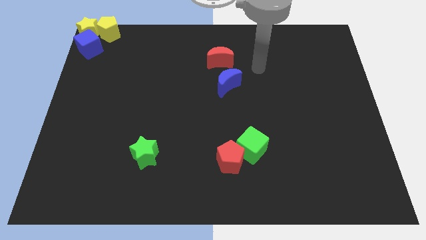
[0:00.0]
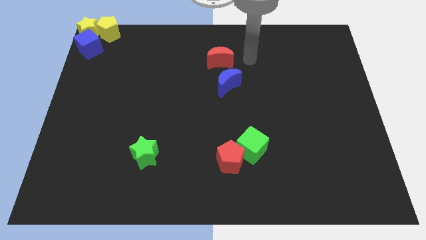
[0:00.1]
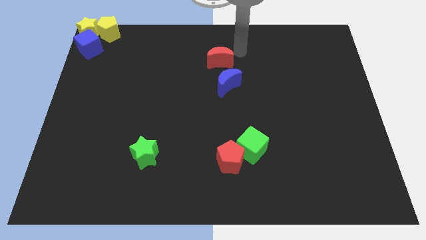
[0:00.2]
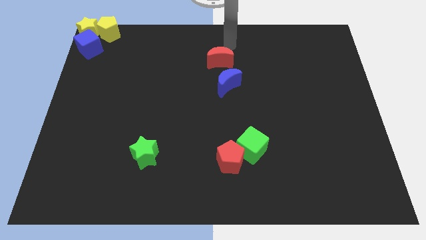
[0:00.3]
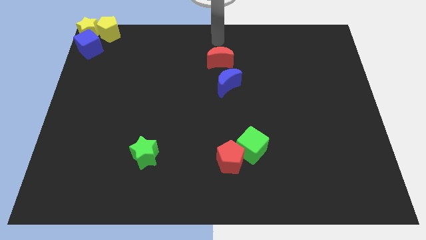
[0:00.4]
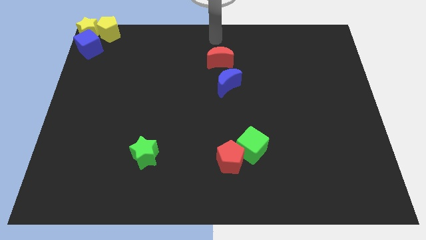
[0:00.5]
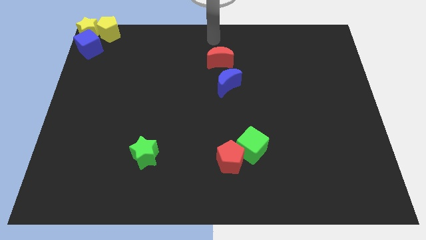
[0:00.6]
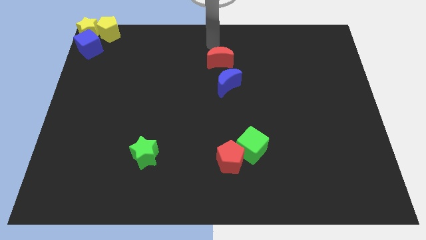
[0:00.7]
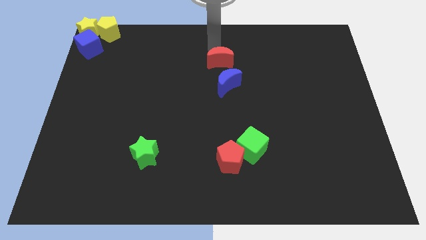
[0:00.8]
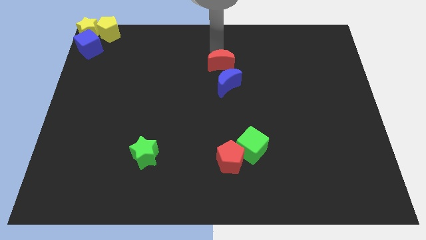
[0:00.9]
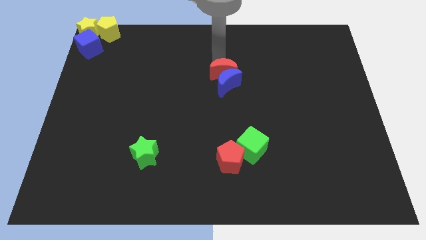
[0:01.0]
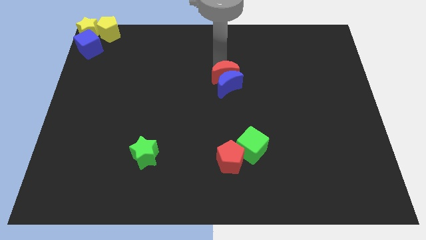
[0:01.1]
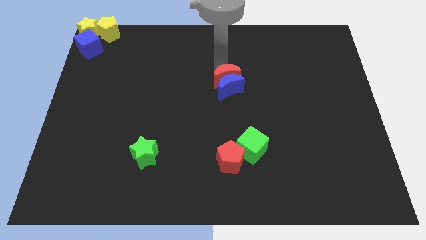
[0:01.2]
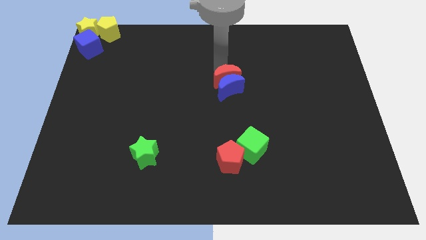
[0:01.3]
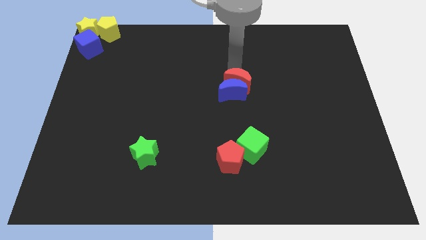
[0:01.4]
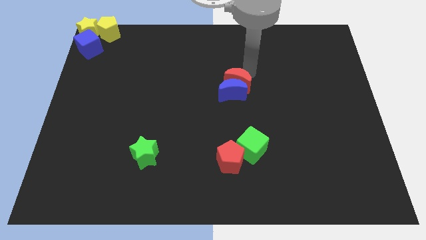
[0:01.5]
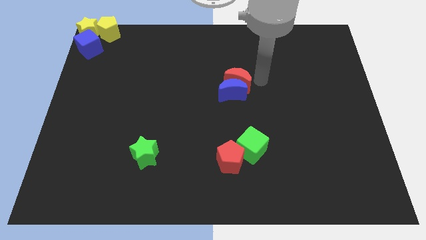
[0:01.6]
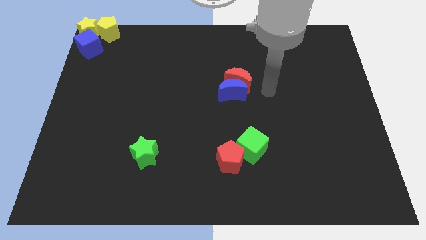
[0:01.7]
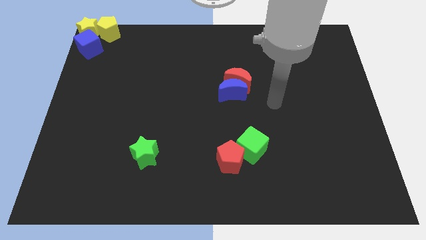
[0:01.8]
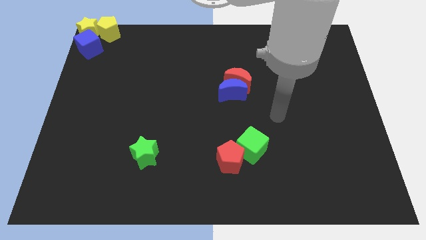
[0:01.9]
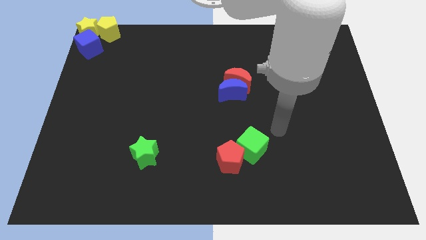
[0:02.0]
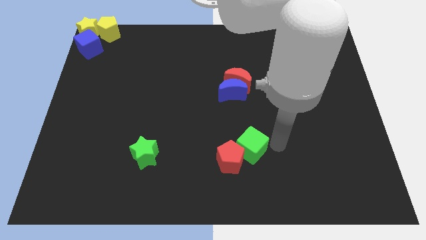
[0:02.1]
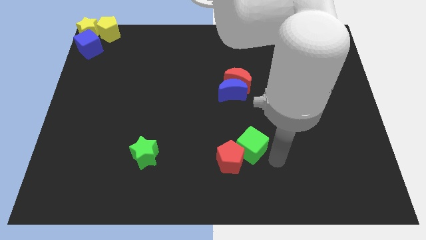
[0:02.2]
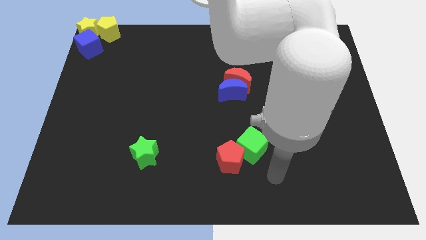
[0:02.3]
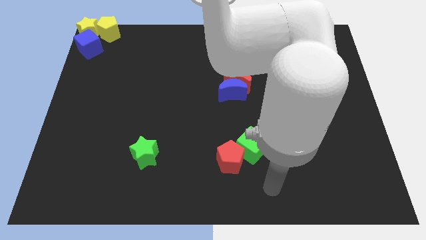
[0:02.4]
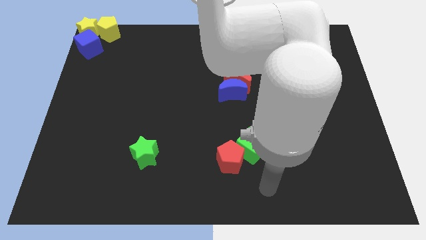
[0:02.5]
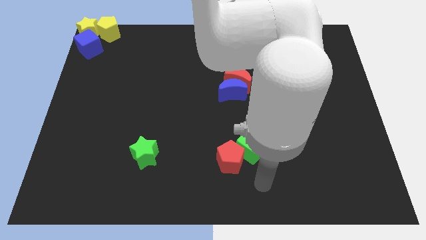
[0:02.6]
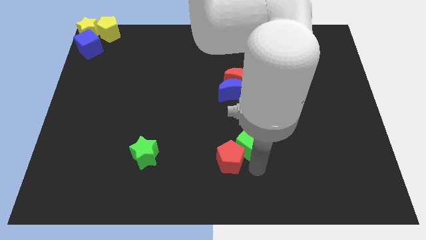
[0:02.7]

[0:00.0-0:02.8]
place the arm down to the green cube

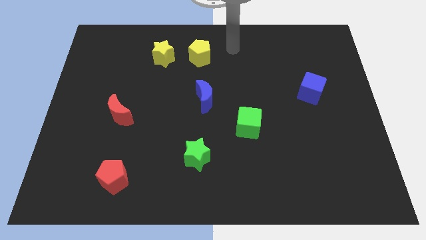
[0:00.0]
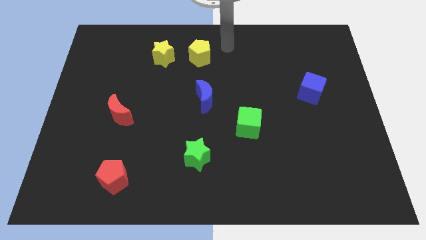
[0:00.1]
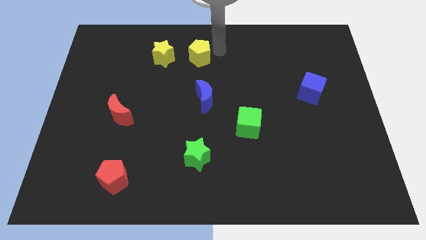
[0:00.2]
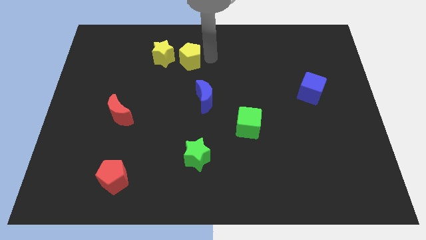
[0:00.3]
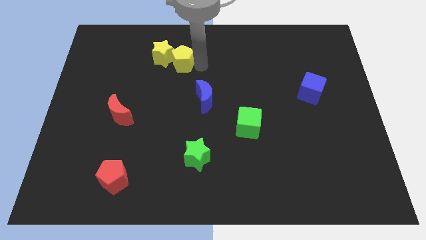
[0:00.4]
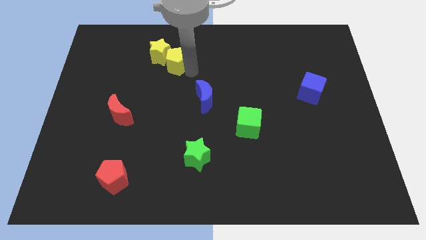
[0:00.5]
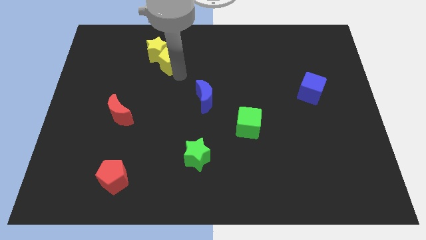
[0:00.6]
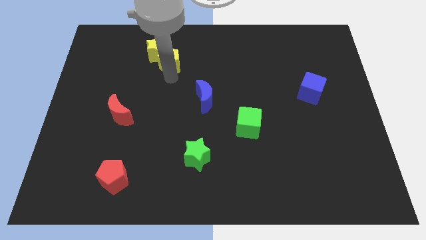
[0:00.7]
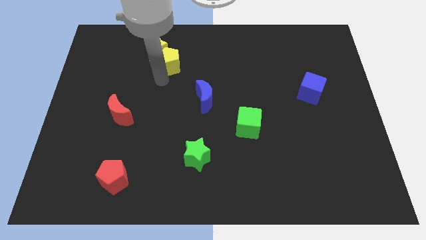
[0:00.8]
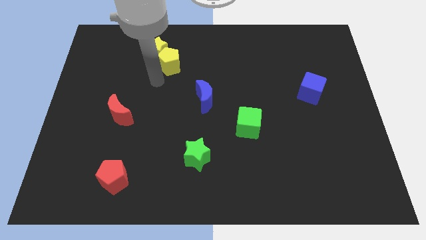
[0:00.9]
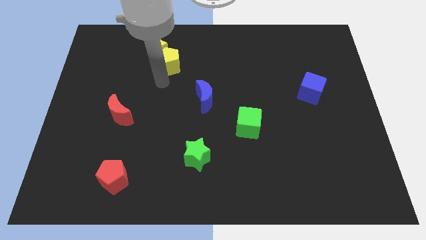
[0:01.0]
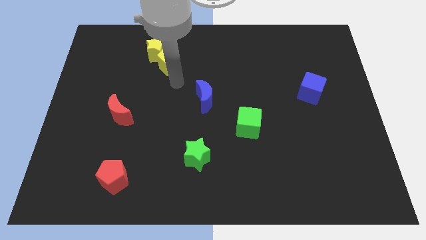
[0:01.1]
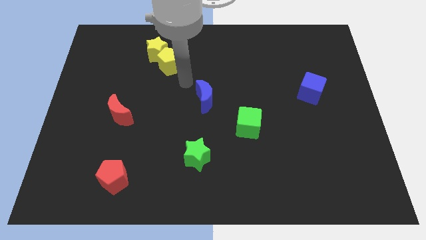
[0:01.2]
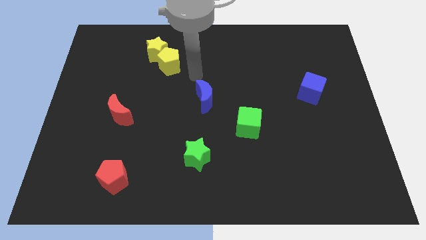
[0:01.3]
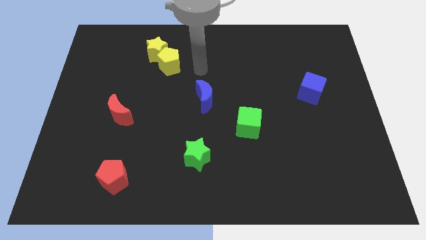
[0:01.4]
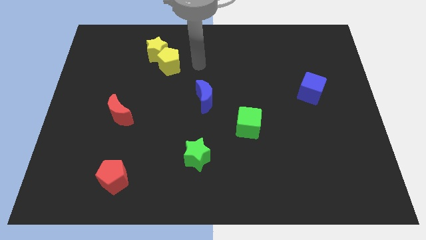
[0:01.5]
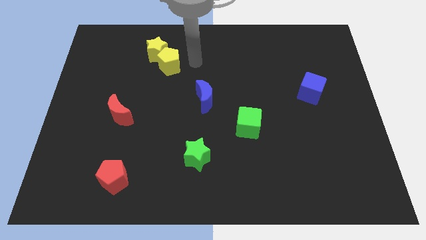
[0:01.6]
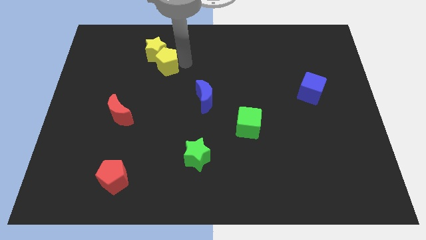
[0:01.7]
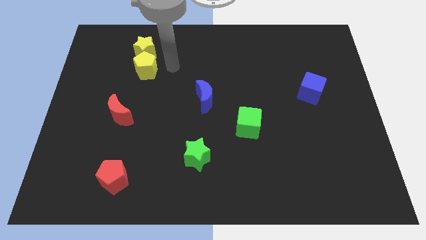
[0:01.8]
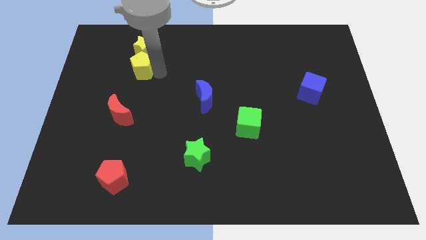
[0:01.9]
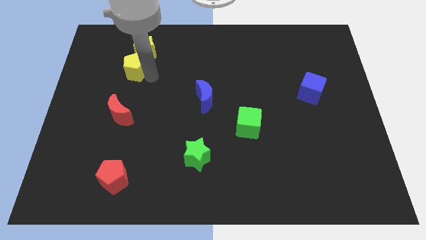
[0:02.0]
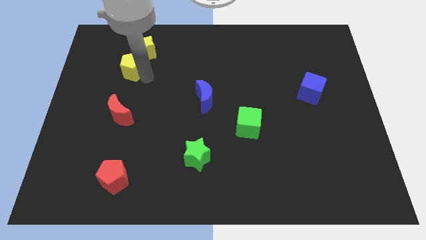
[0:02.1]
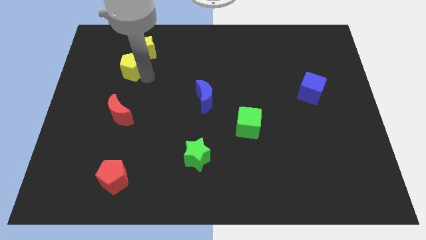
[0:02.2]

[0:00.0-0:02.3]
place the yellow pentagon below the yellow star

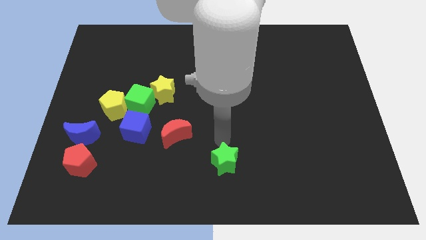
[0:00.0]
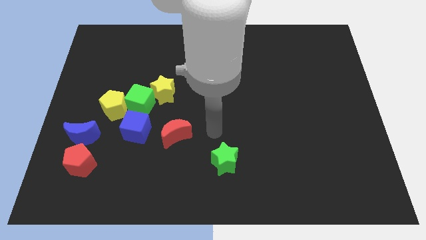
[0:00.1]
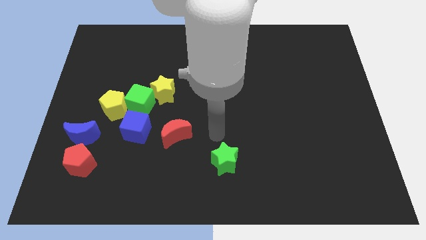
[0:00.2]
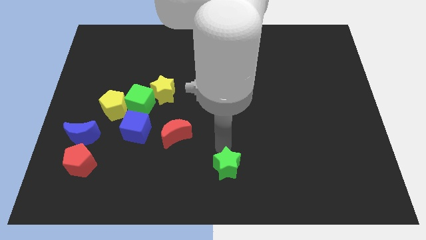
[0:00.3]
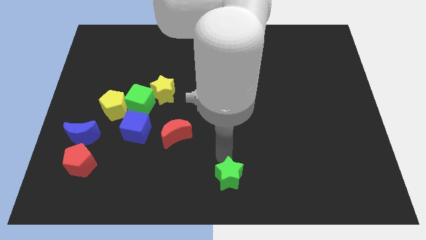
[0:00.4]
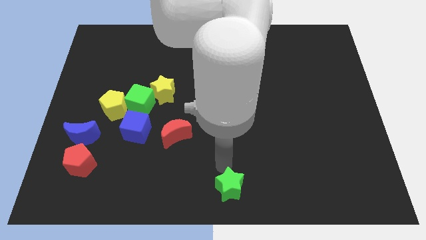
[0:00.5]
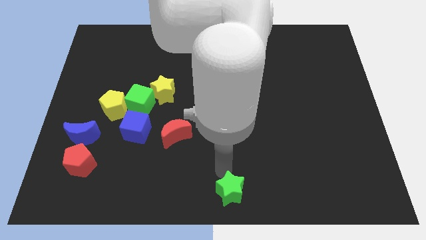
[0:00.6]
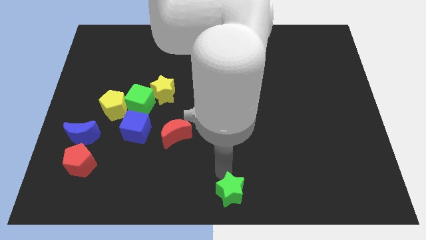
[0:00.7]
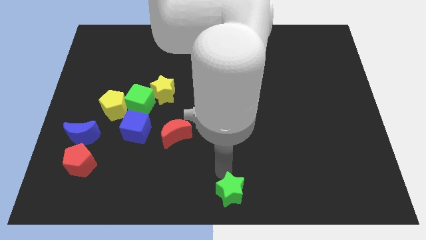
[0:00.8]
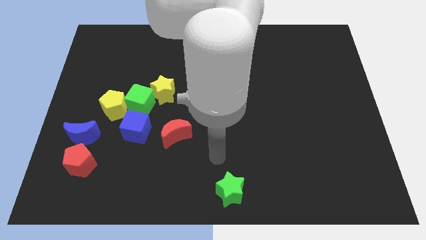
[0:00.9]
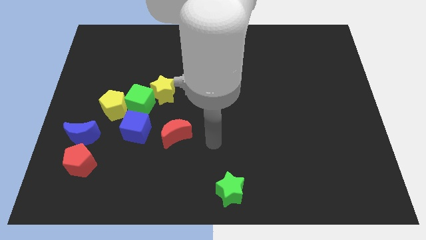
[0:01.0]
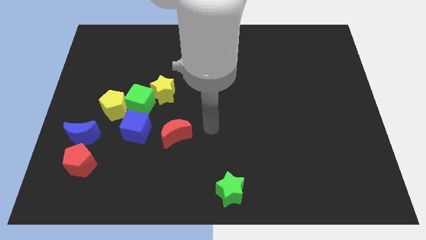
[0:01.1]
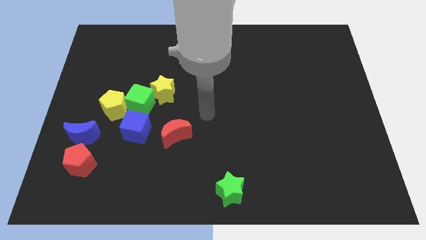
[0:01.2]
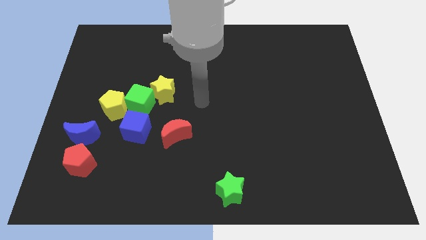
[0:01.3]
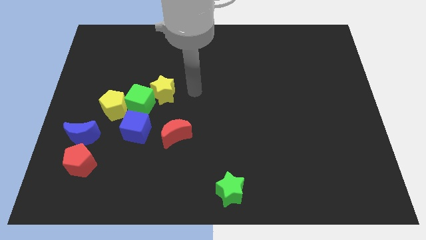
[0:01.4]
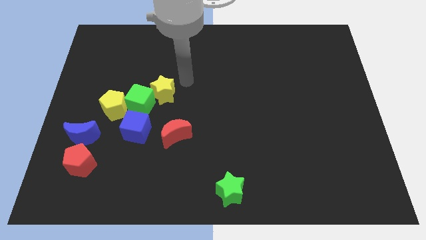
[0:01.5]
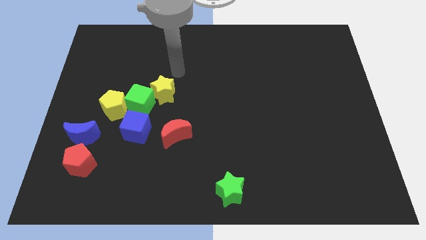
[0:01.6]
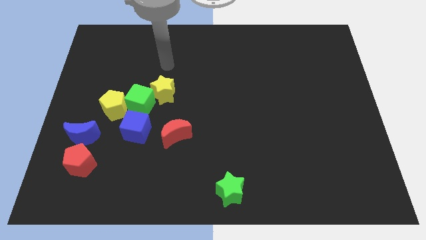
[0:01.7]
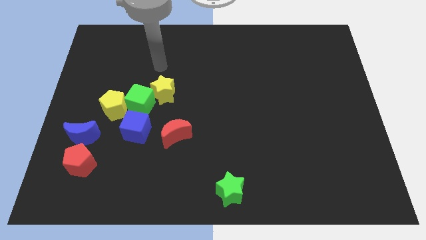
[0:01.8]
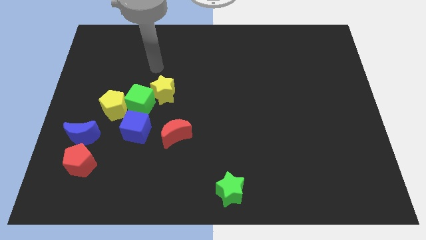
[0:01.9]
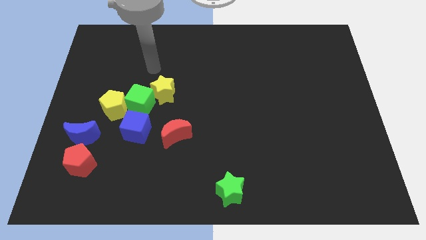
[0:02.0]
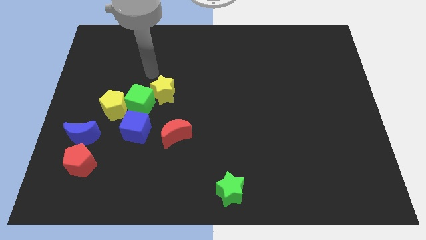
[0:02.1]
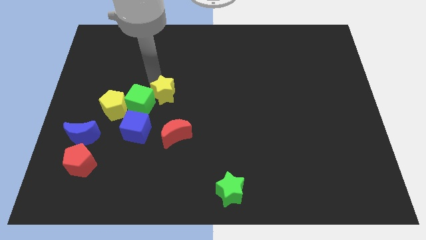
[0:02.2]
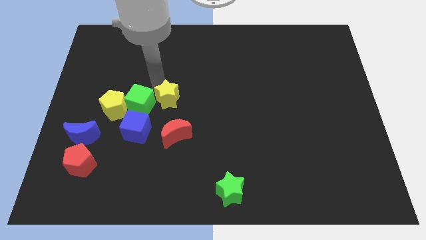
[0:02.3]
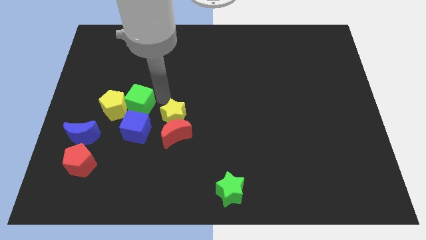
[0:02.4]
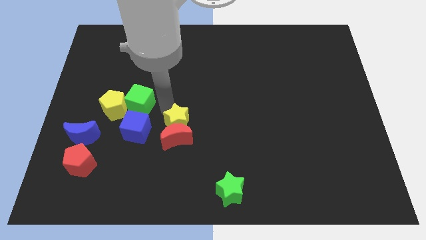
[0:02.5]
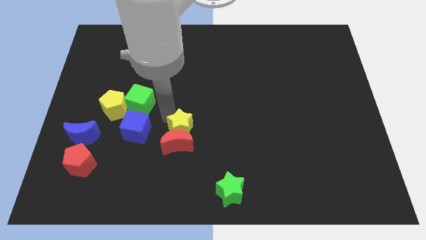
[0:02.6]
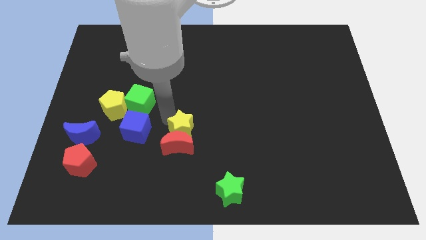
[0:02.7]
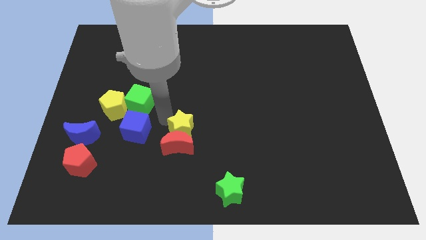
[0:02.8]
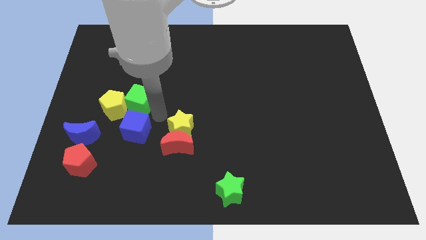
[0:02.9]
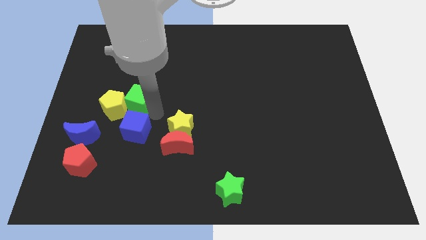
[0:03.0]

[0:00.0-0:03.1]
slide yellow star into the red crescent

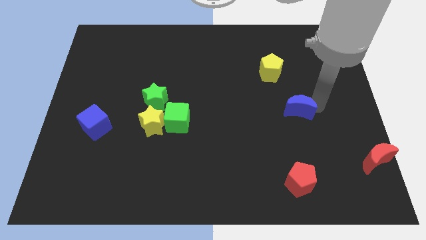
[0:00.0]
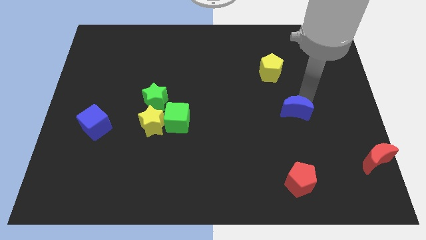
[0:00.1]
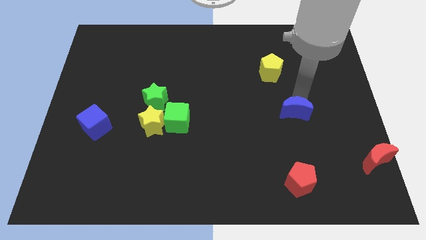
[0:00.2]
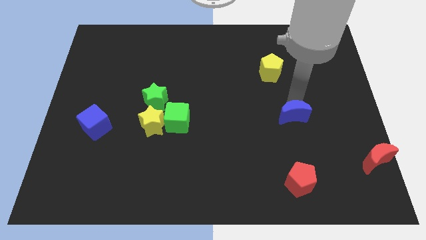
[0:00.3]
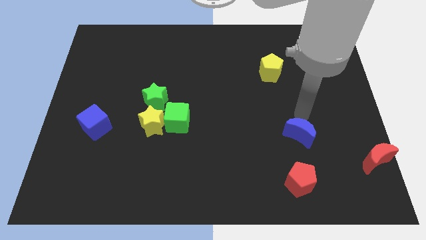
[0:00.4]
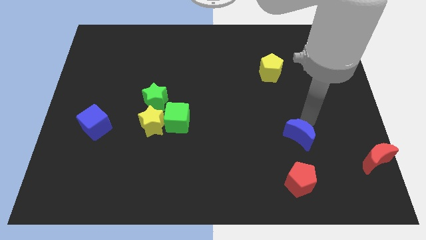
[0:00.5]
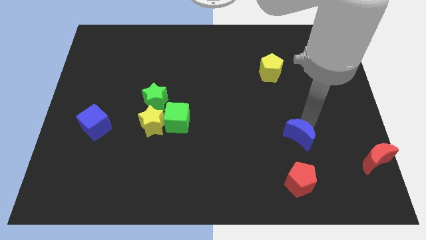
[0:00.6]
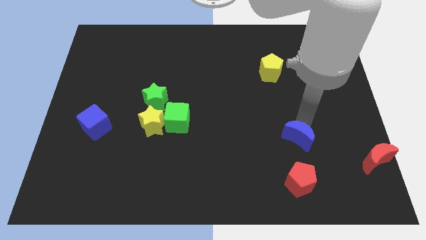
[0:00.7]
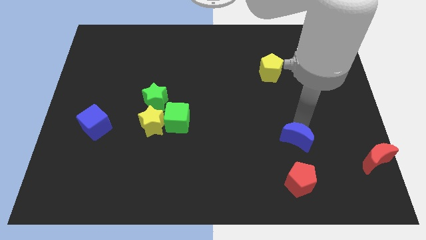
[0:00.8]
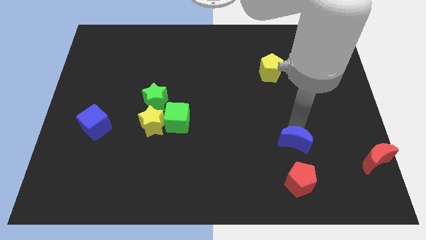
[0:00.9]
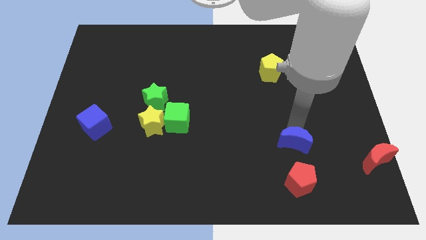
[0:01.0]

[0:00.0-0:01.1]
push the blue moon downward
